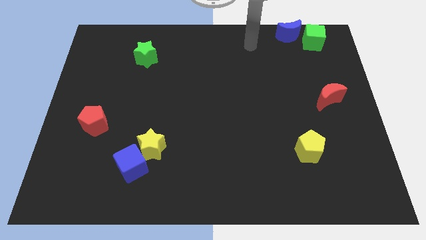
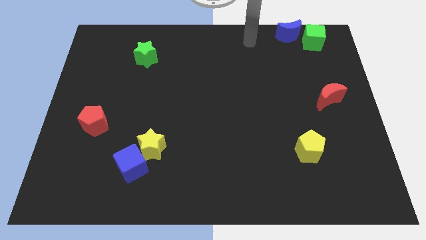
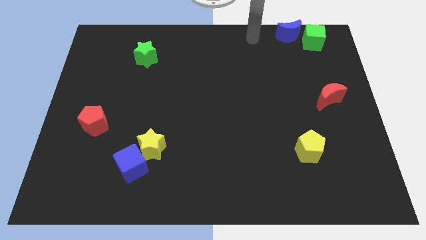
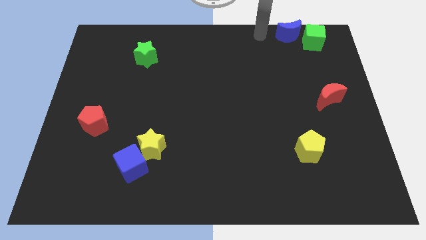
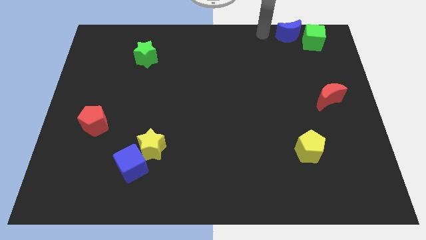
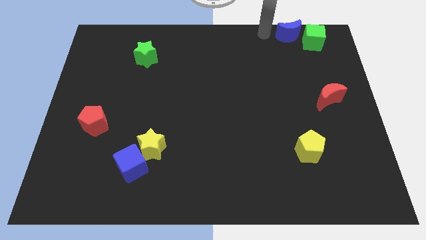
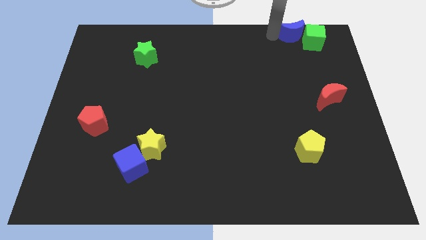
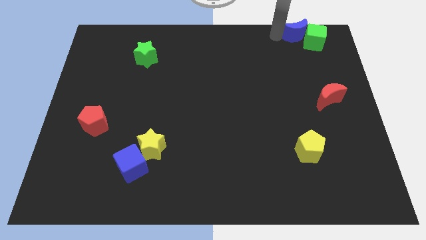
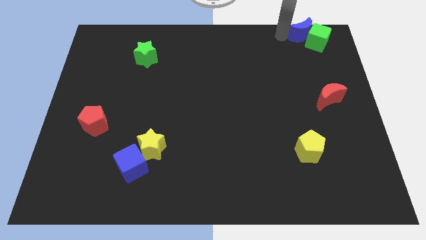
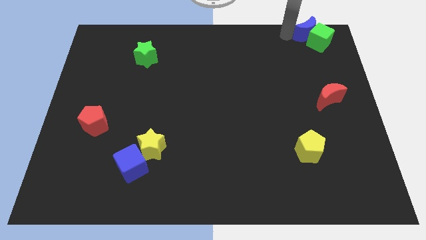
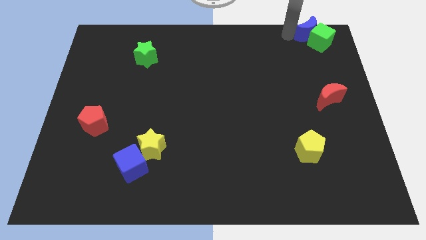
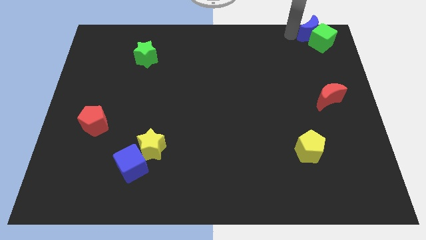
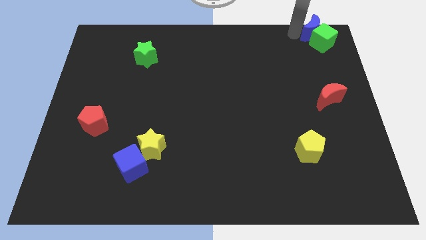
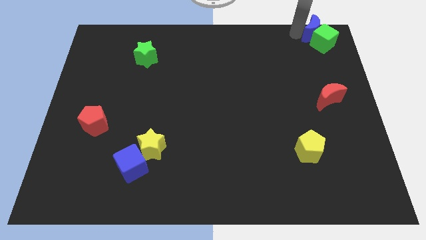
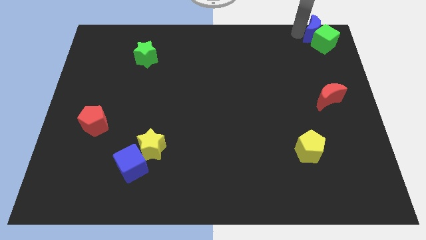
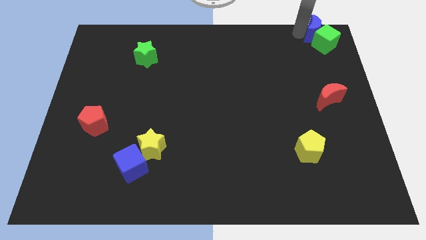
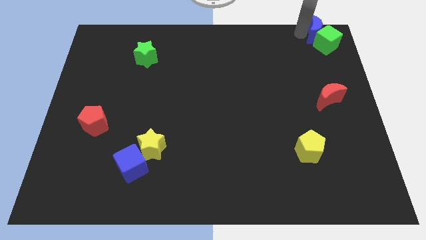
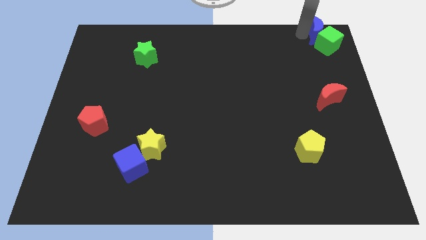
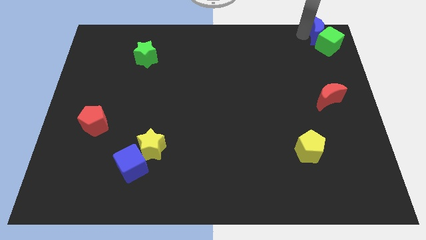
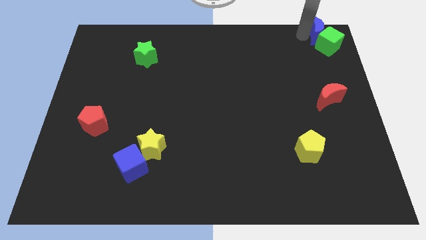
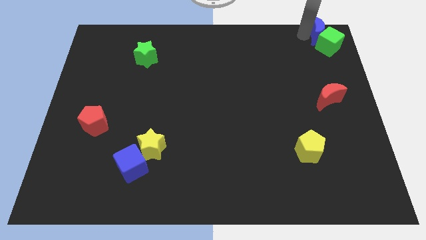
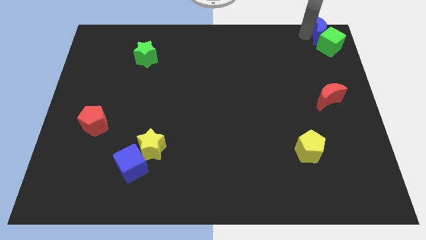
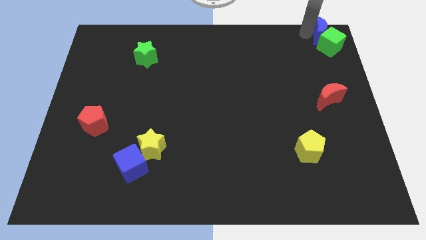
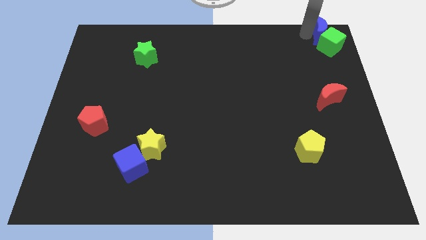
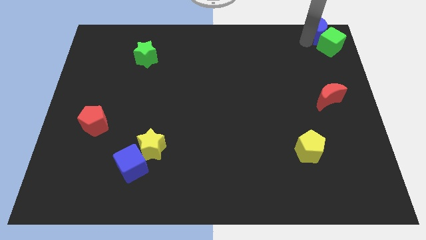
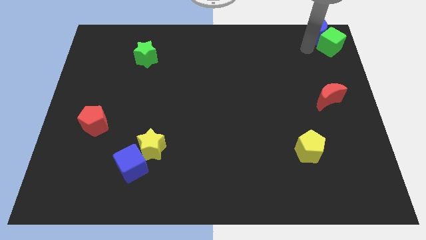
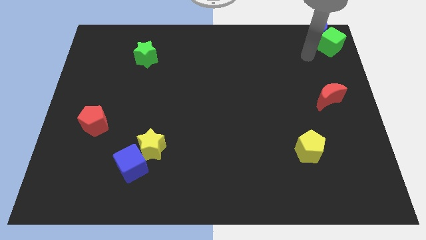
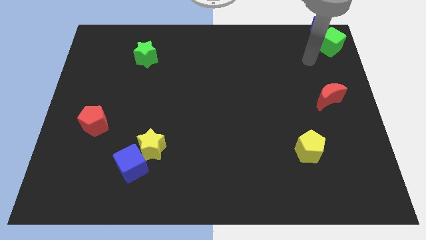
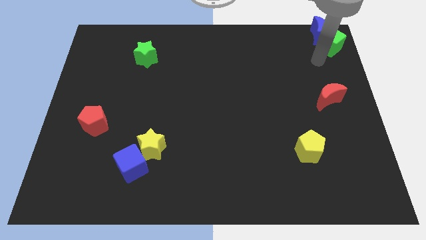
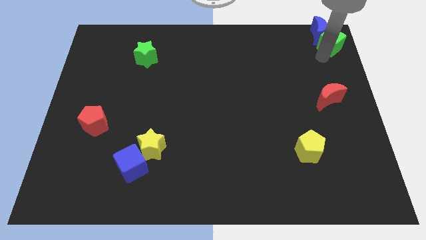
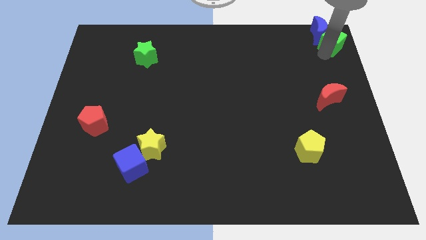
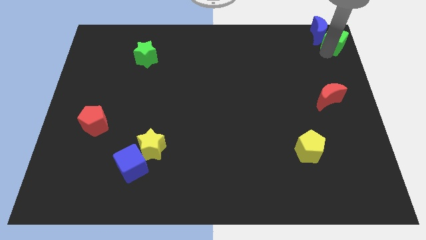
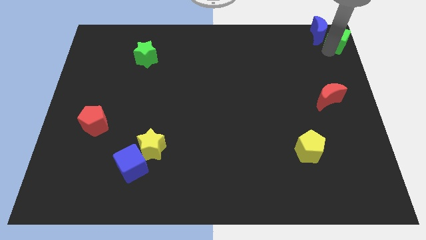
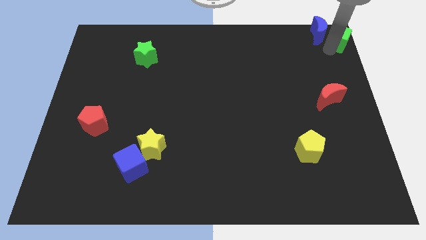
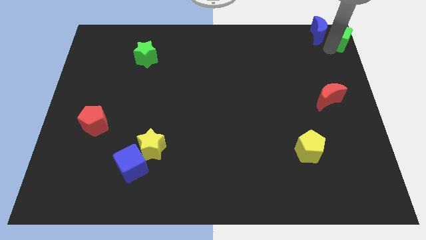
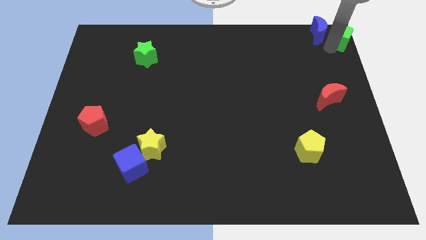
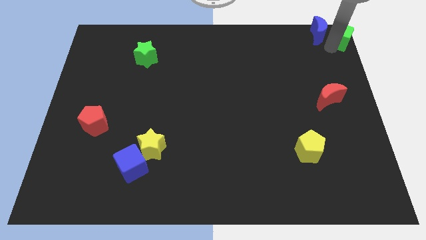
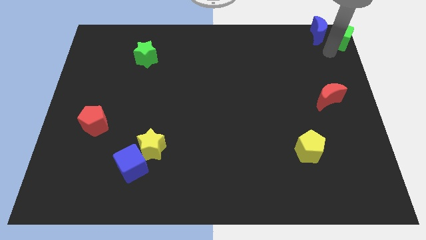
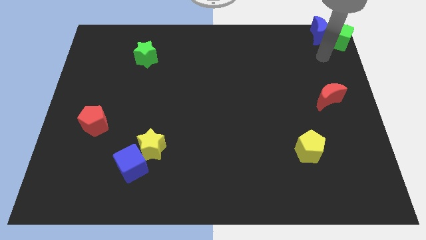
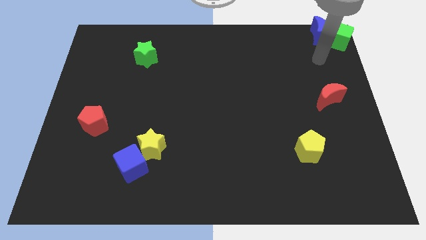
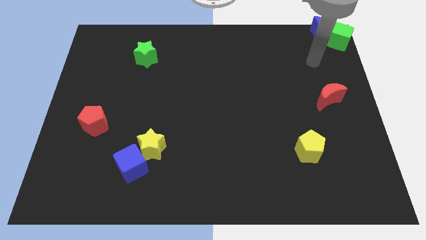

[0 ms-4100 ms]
push blue crescent along with green cube to the top right corner of the board

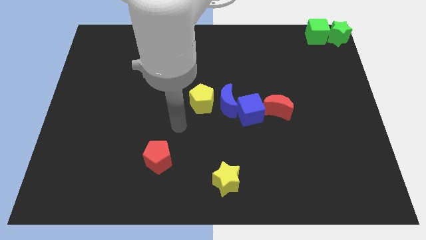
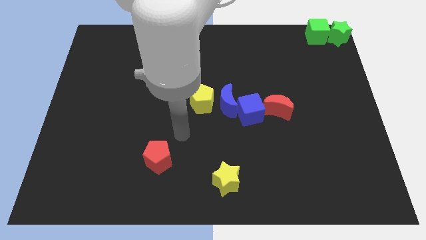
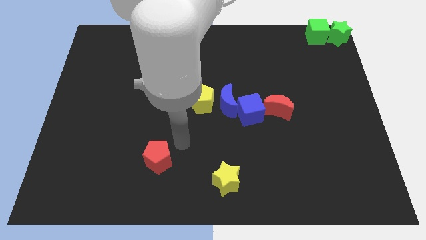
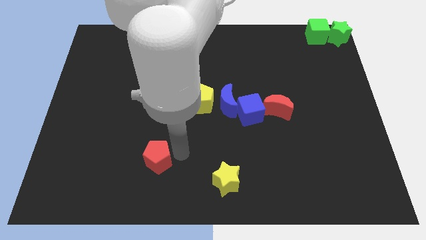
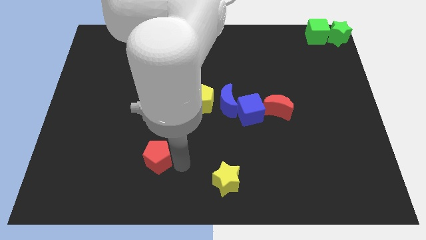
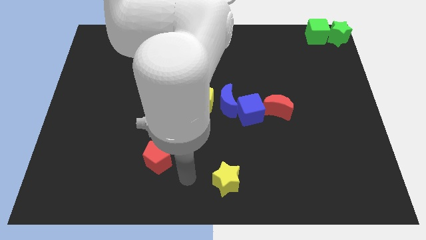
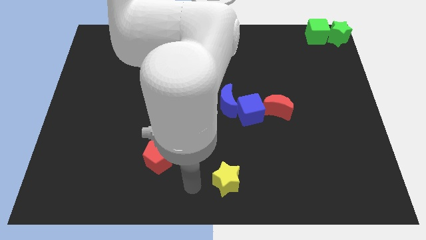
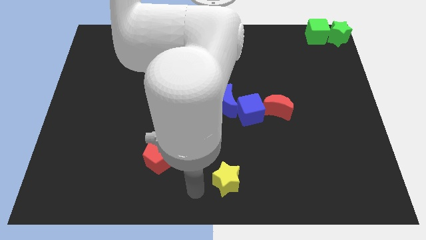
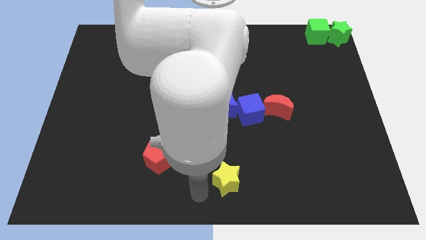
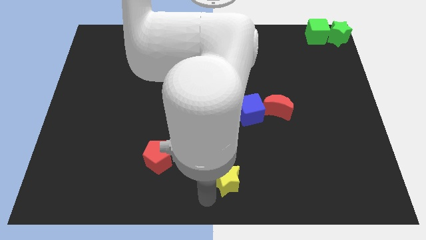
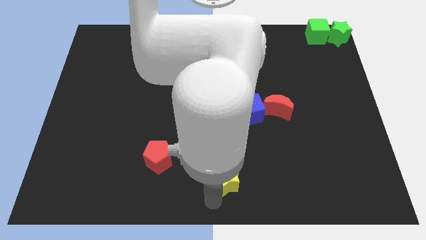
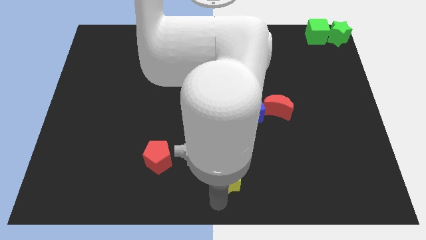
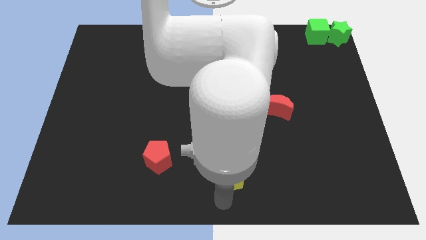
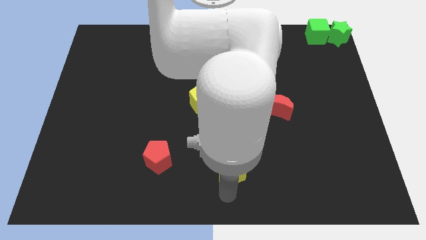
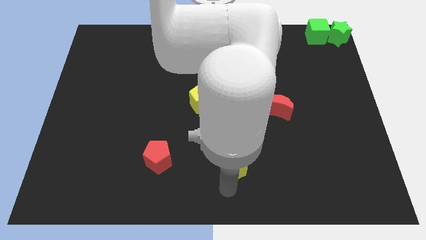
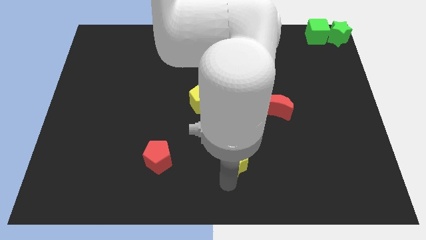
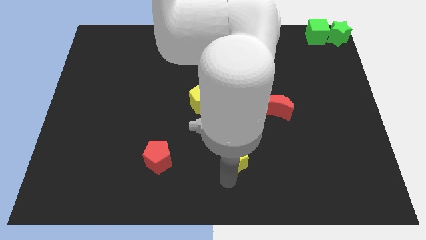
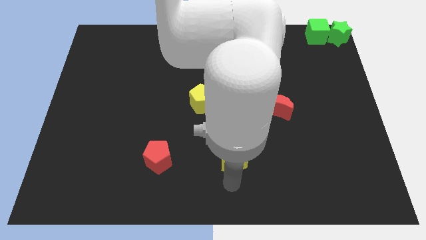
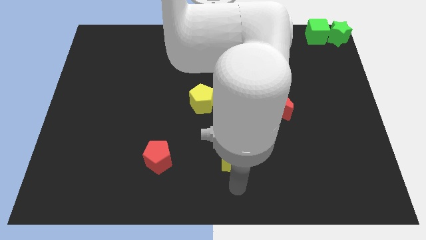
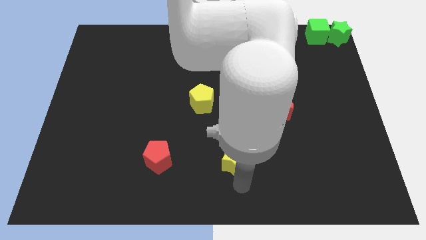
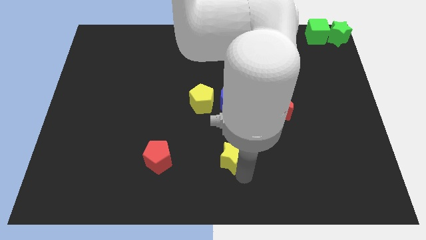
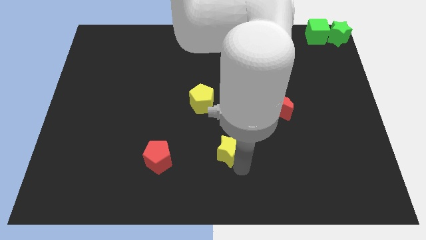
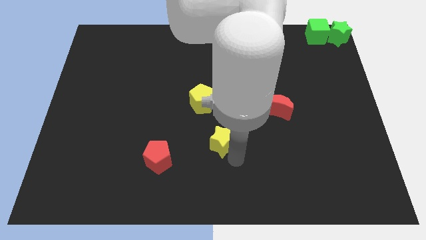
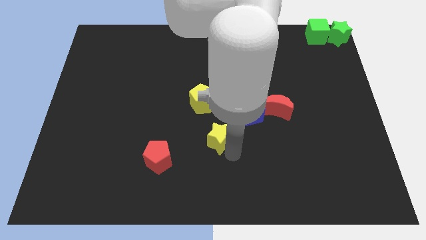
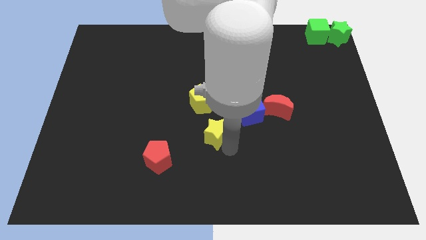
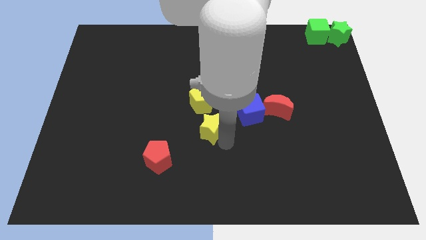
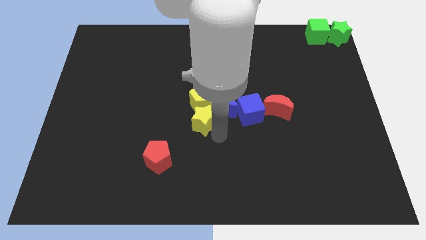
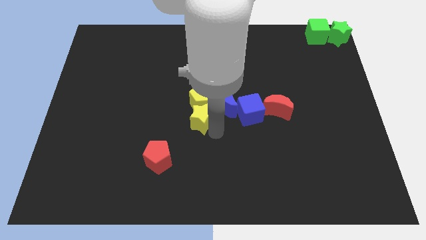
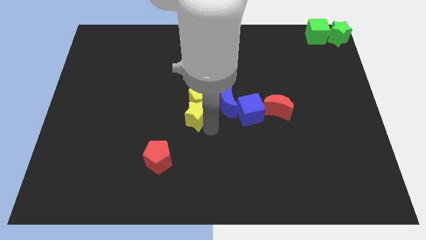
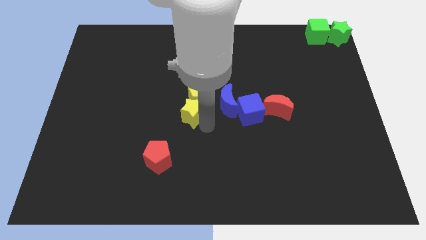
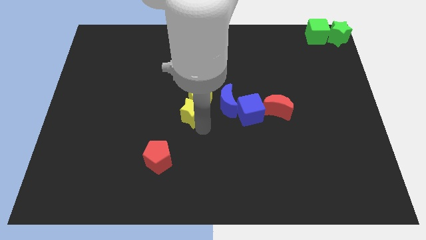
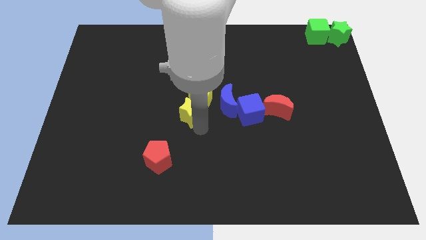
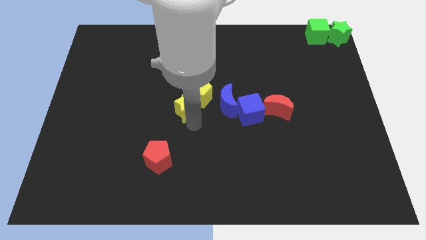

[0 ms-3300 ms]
move the yellow star close to the bottom left of the yellow pentagon

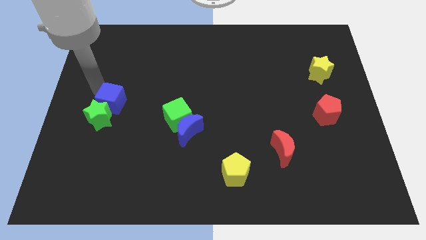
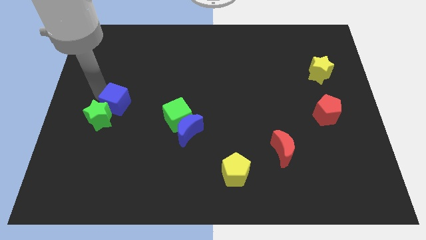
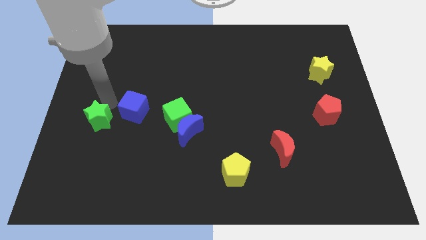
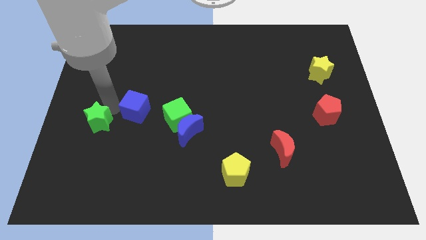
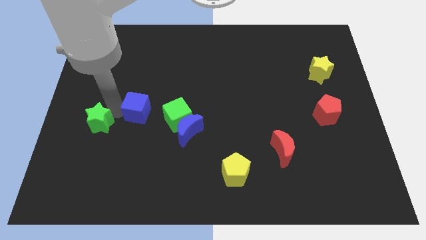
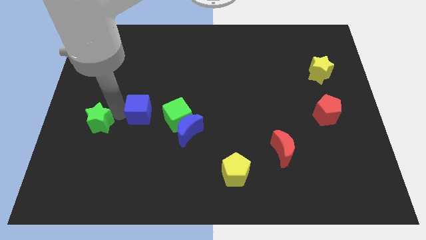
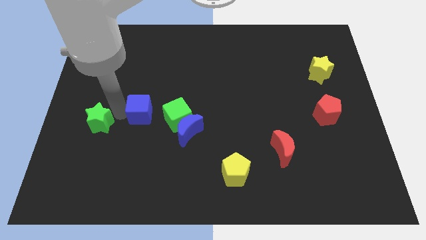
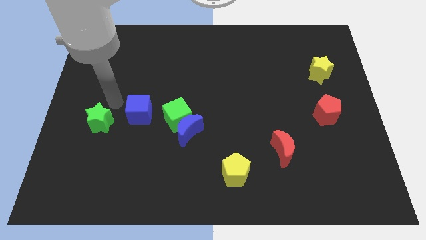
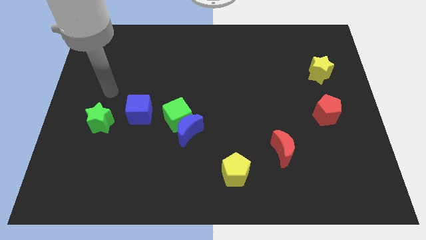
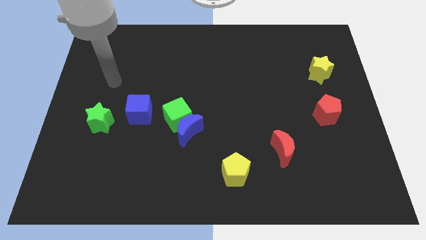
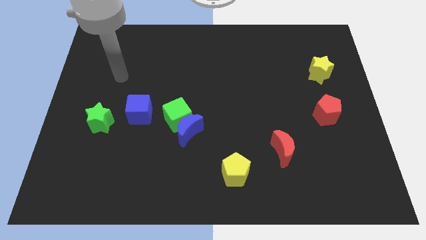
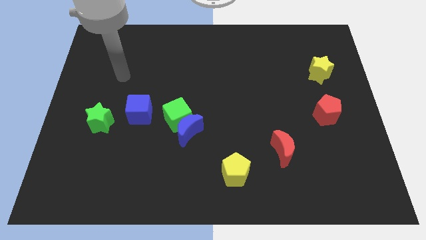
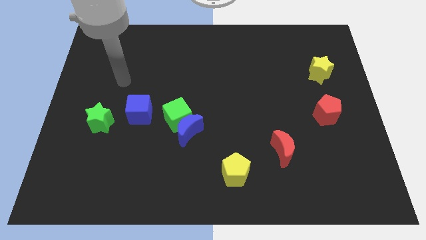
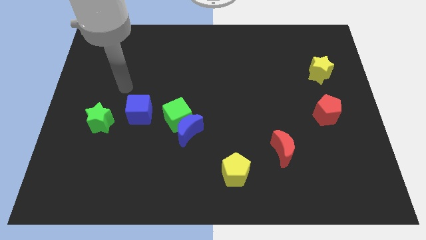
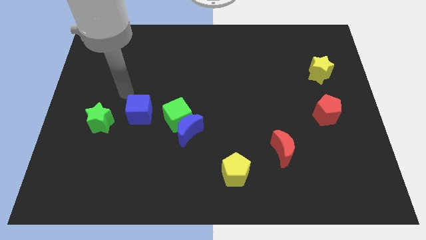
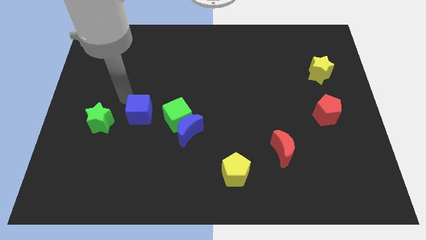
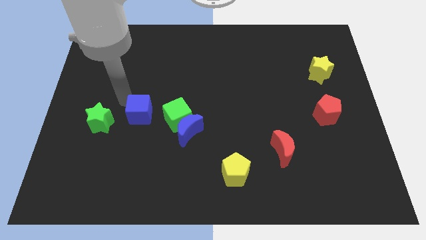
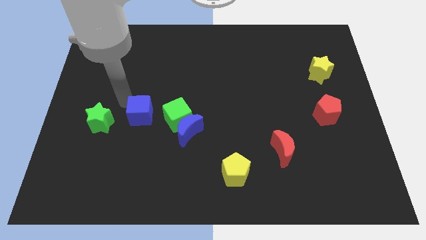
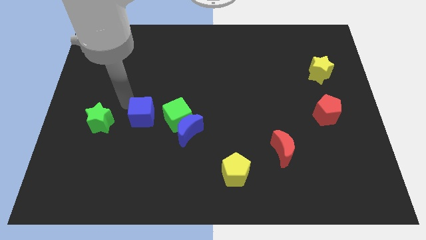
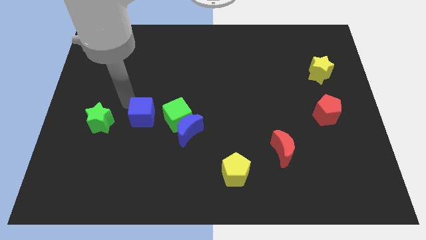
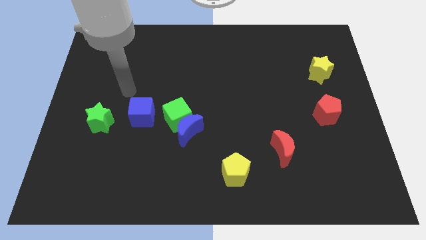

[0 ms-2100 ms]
place the blue cube in between green star and green cube
